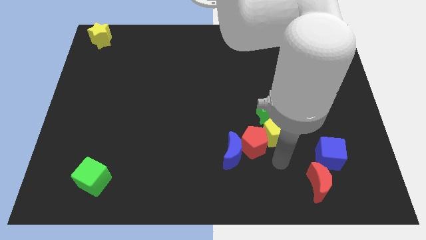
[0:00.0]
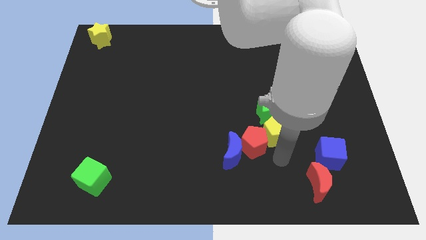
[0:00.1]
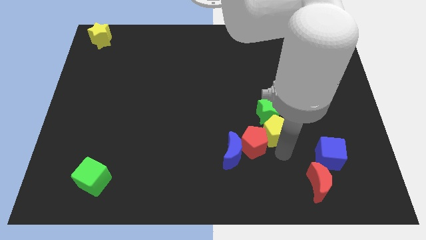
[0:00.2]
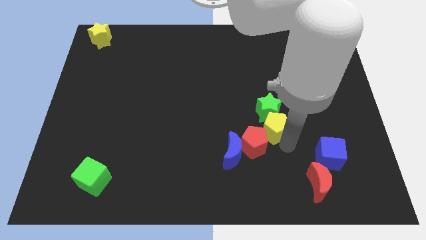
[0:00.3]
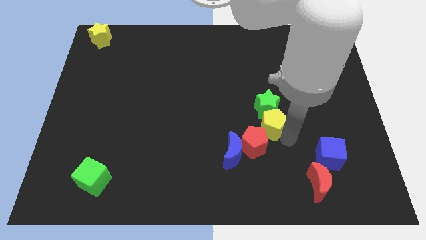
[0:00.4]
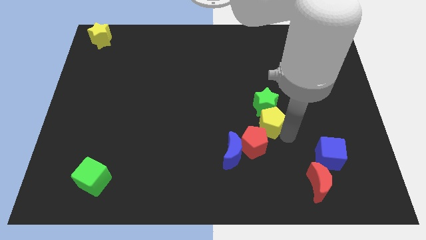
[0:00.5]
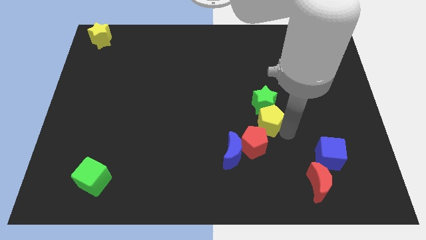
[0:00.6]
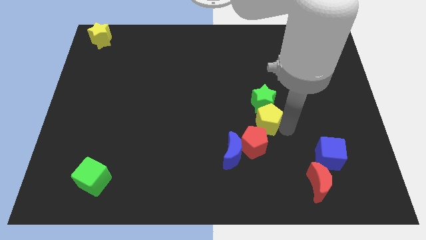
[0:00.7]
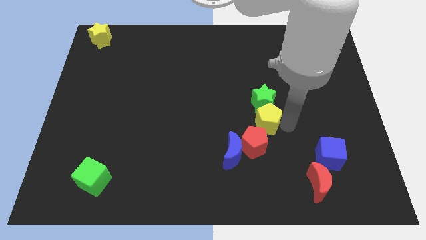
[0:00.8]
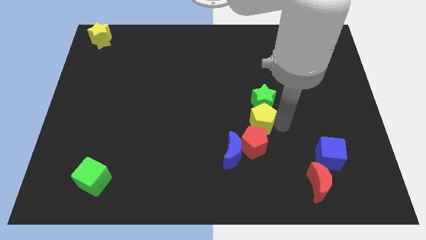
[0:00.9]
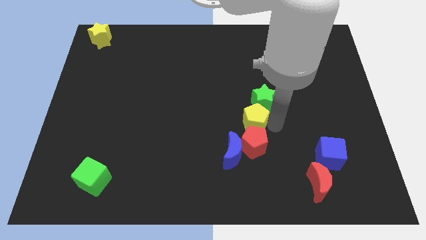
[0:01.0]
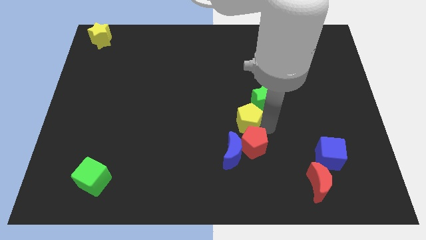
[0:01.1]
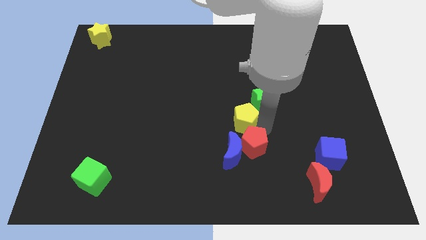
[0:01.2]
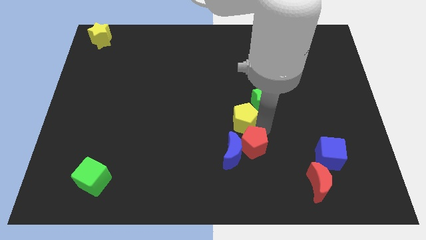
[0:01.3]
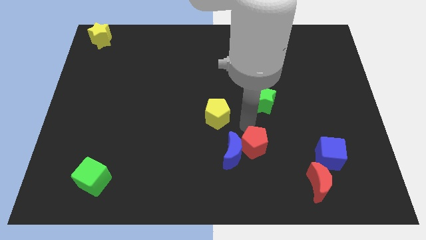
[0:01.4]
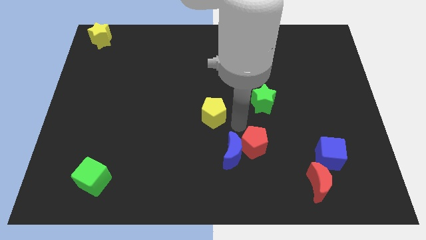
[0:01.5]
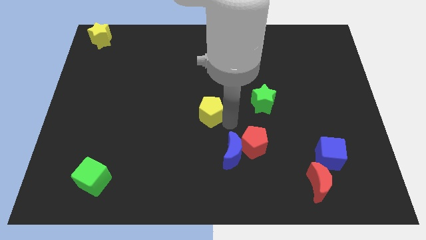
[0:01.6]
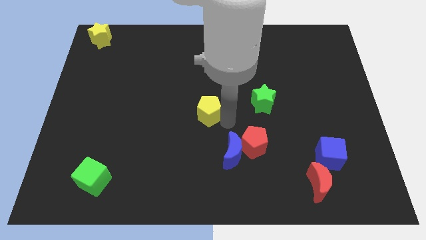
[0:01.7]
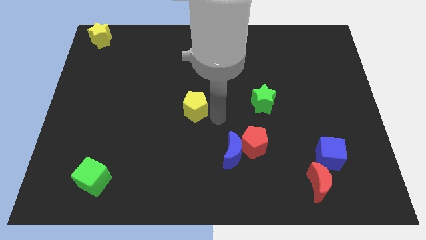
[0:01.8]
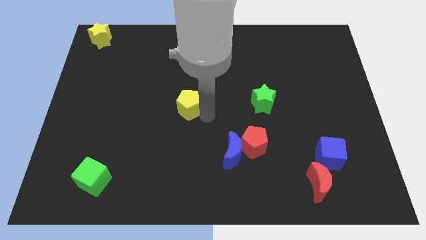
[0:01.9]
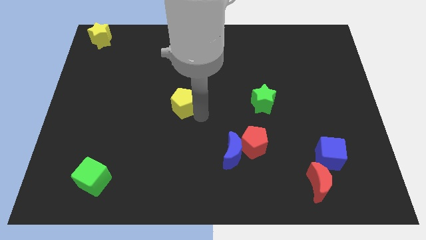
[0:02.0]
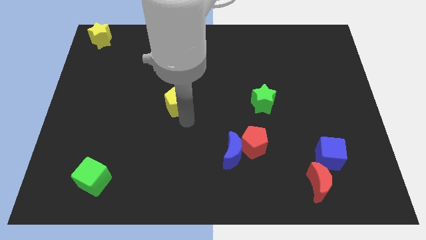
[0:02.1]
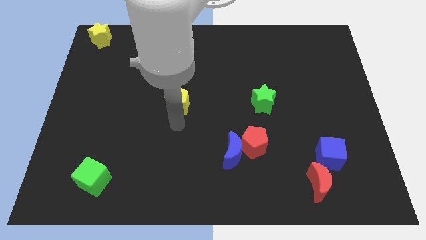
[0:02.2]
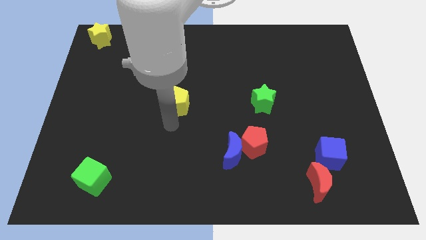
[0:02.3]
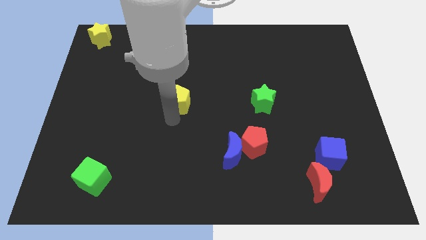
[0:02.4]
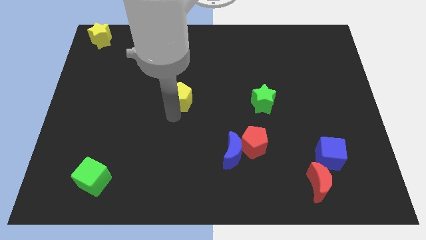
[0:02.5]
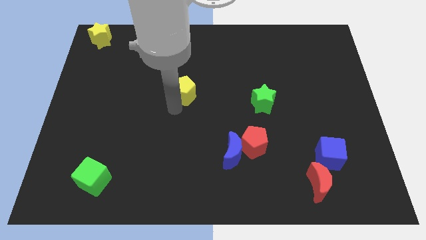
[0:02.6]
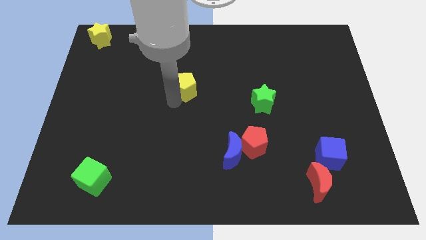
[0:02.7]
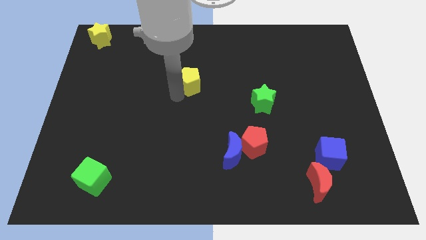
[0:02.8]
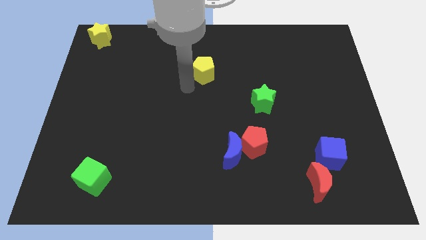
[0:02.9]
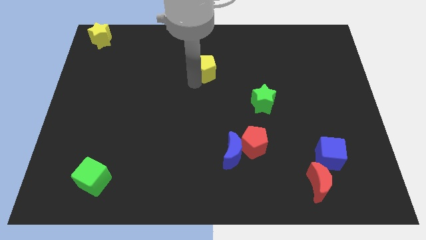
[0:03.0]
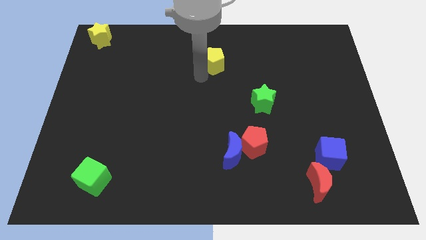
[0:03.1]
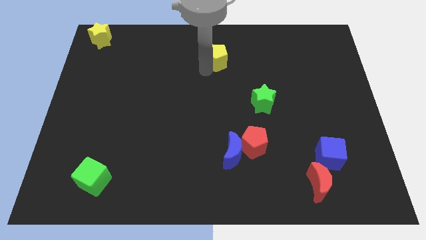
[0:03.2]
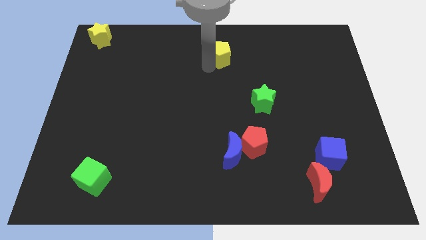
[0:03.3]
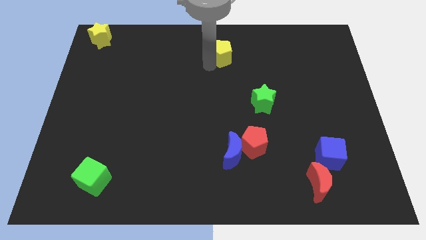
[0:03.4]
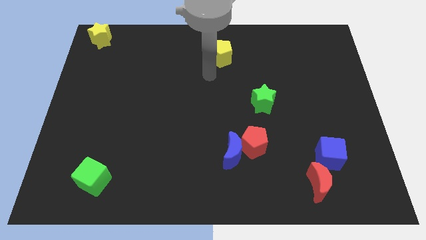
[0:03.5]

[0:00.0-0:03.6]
push the yellow pentagon to the top left of the green star

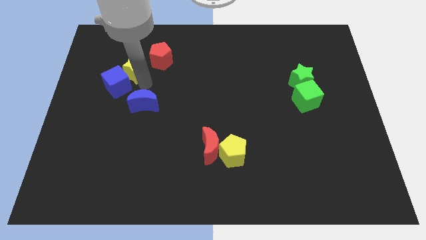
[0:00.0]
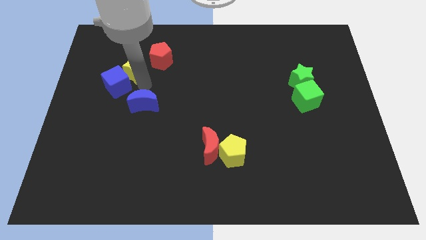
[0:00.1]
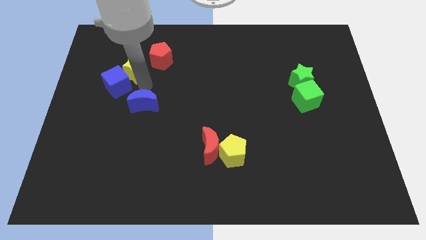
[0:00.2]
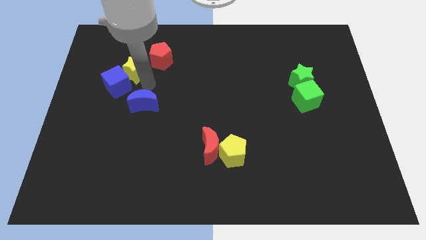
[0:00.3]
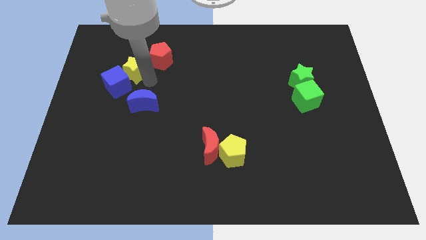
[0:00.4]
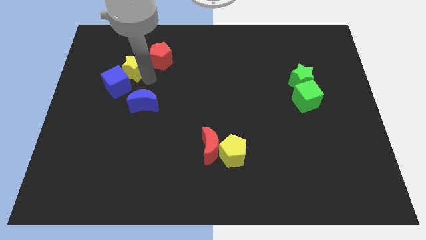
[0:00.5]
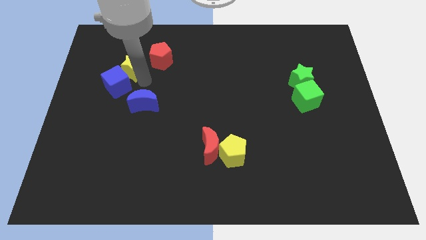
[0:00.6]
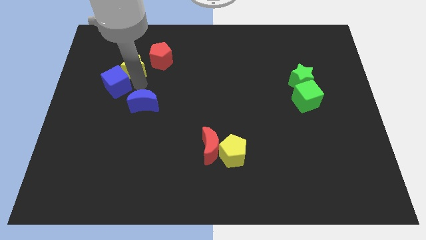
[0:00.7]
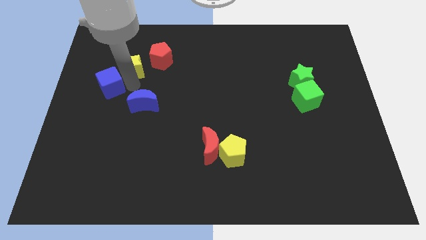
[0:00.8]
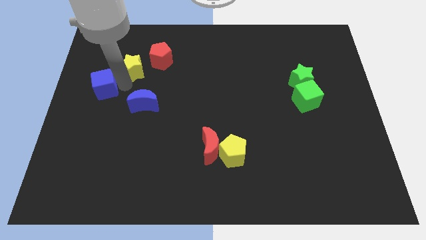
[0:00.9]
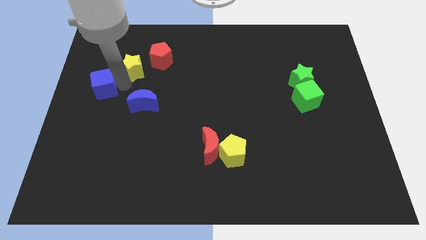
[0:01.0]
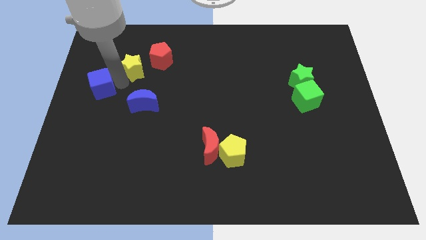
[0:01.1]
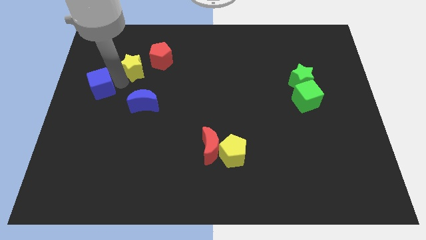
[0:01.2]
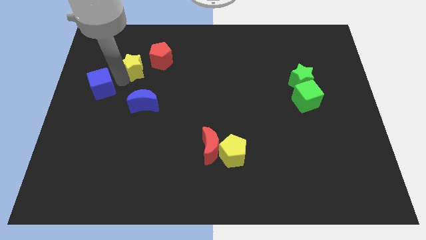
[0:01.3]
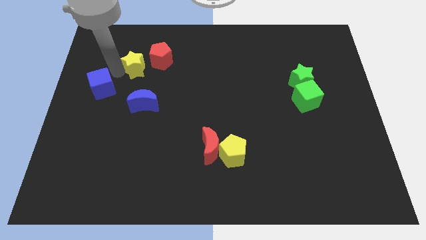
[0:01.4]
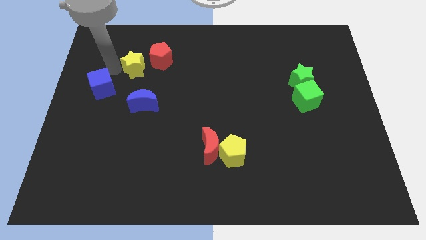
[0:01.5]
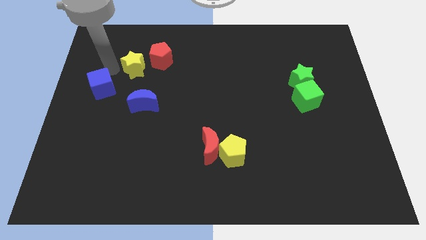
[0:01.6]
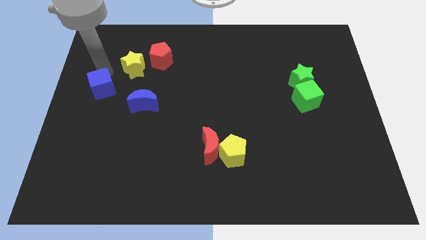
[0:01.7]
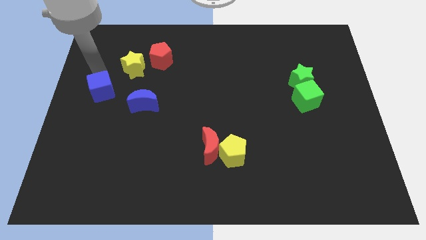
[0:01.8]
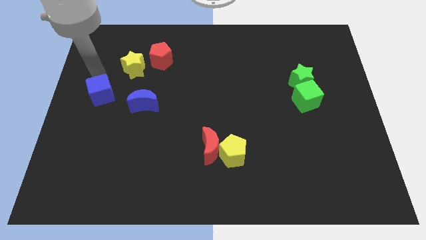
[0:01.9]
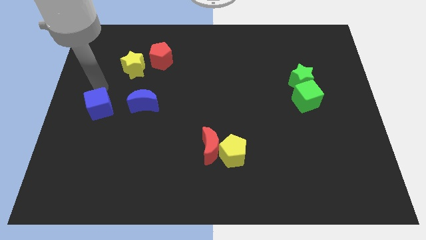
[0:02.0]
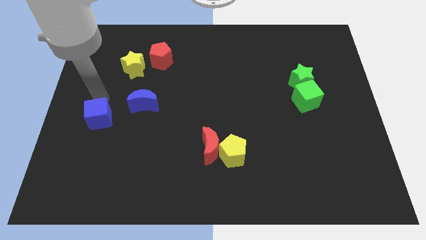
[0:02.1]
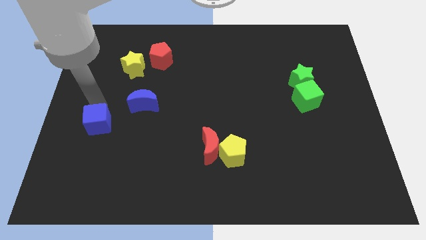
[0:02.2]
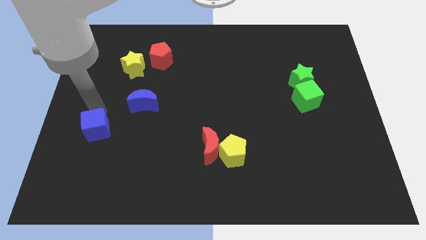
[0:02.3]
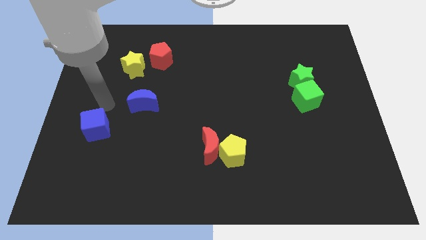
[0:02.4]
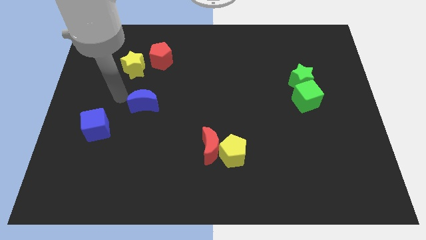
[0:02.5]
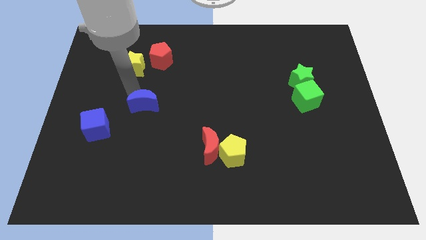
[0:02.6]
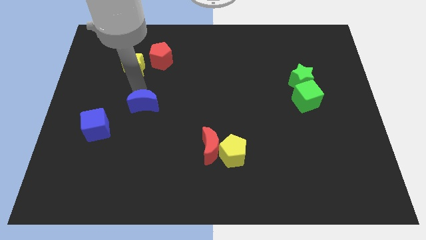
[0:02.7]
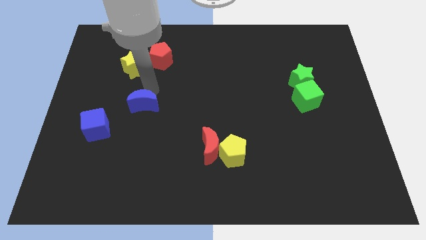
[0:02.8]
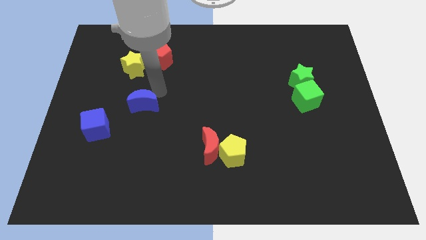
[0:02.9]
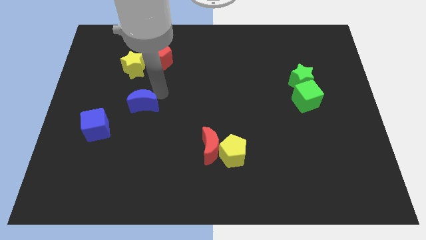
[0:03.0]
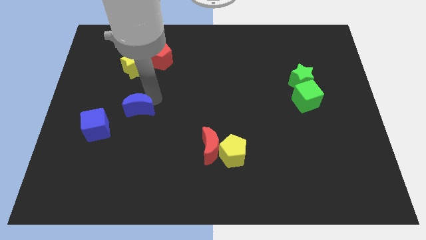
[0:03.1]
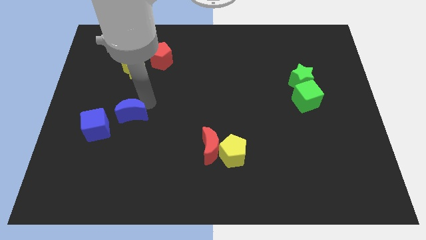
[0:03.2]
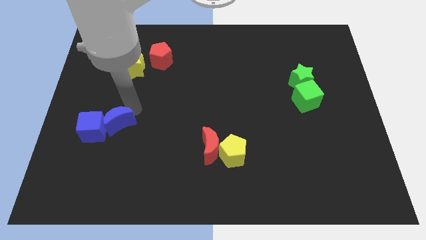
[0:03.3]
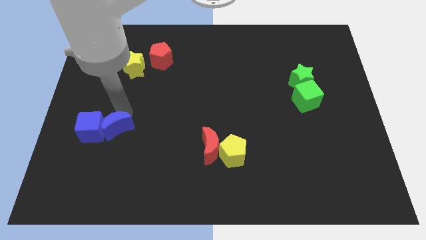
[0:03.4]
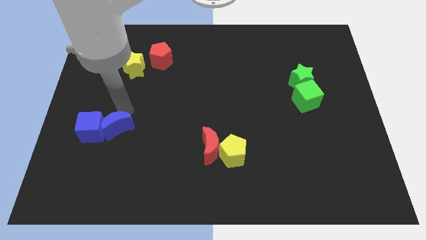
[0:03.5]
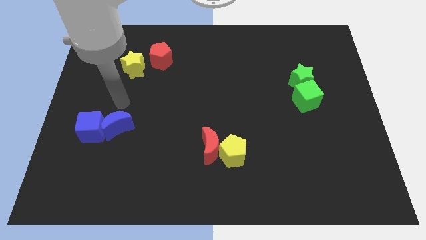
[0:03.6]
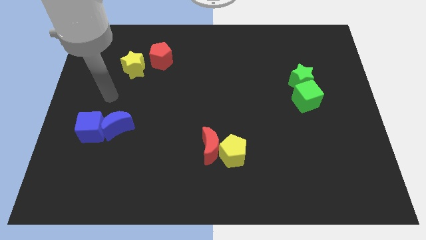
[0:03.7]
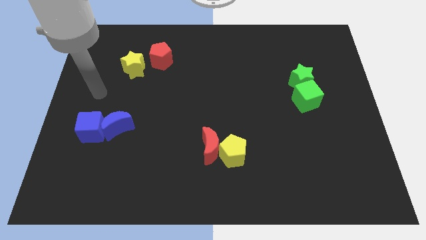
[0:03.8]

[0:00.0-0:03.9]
make a pair of blocks with blue cube and crescent at the center left

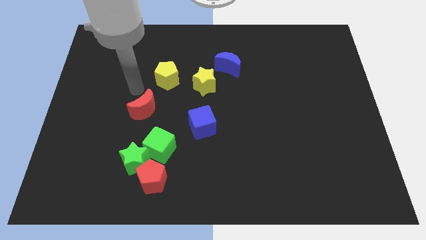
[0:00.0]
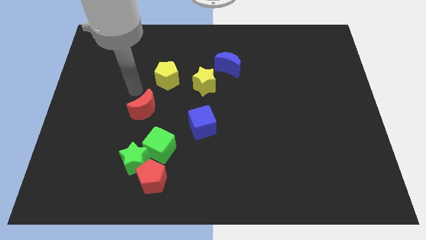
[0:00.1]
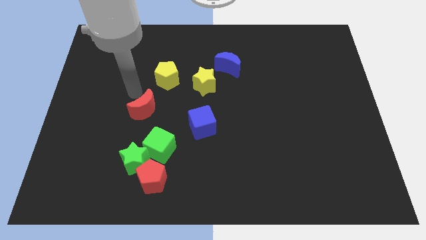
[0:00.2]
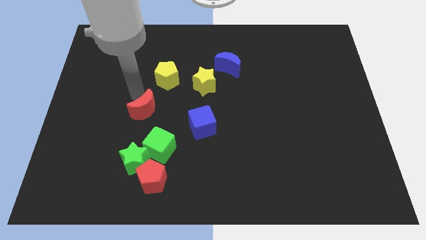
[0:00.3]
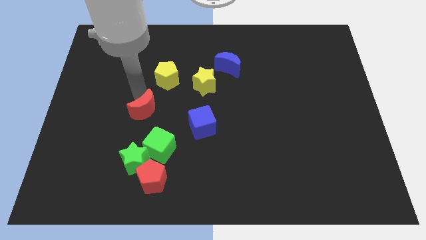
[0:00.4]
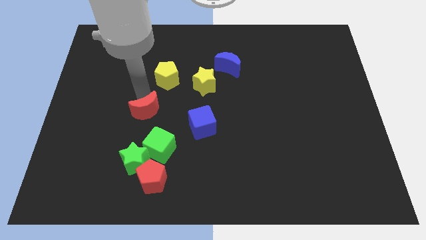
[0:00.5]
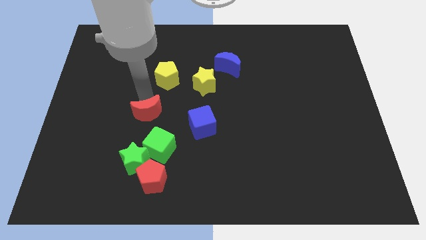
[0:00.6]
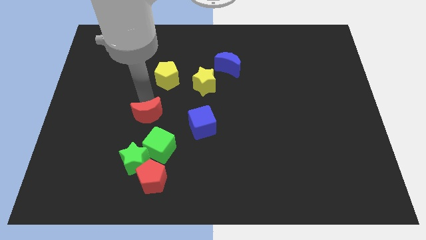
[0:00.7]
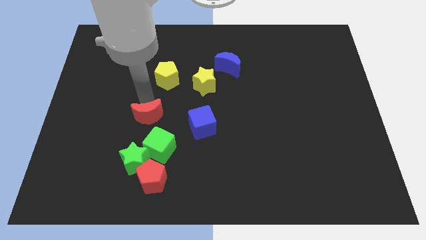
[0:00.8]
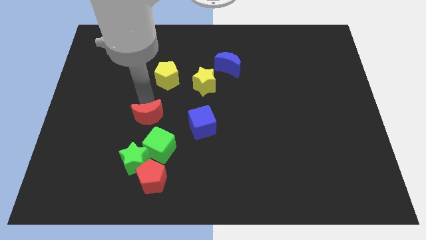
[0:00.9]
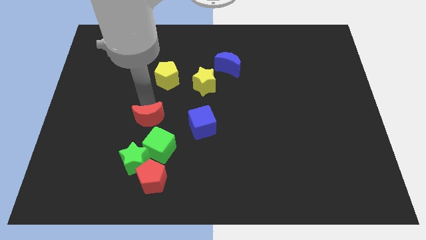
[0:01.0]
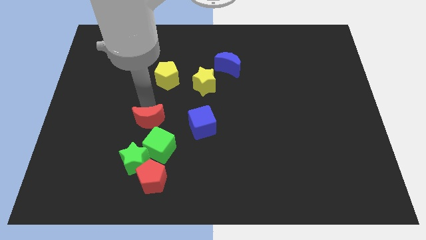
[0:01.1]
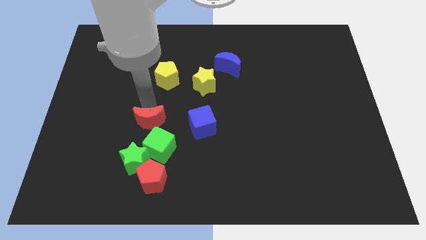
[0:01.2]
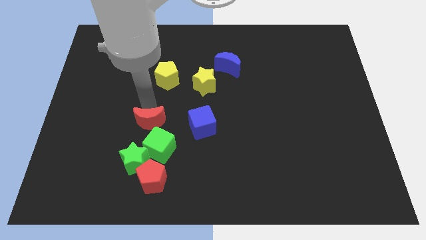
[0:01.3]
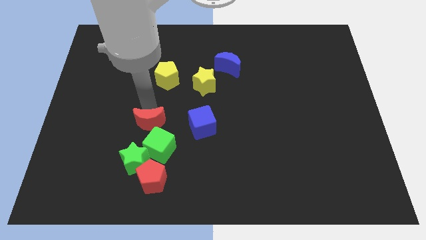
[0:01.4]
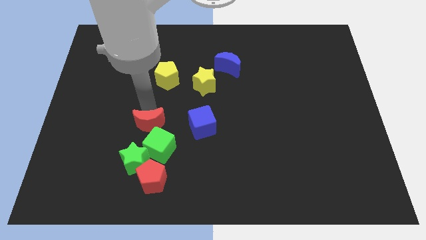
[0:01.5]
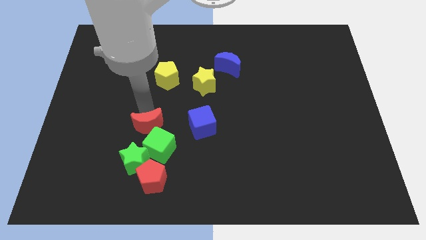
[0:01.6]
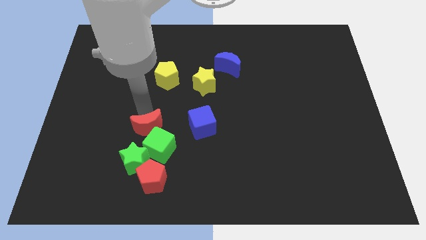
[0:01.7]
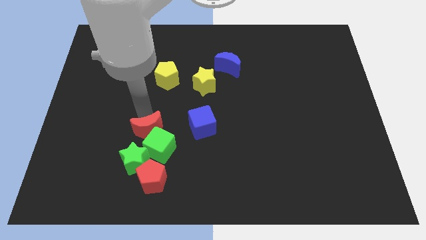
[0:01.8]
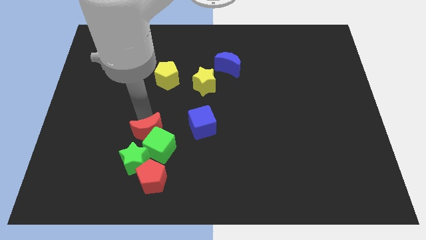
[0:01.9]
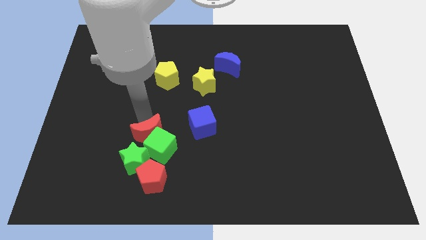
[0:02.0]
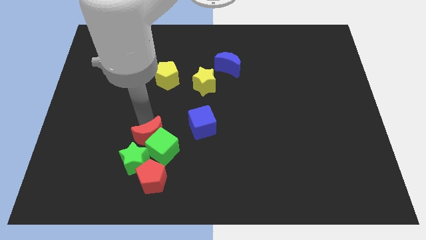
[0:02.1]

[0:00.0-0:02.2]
drag the red crescent to the group of blocks
